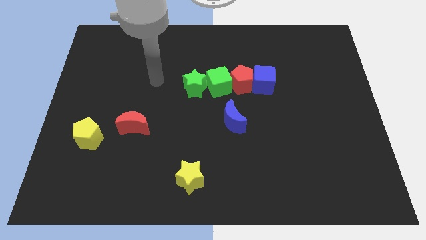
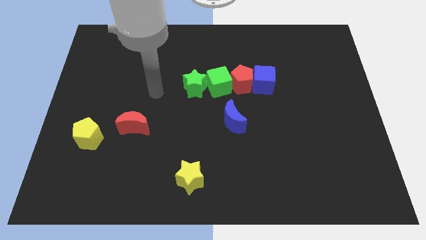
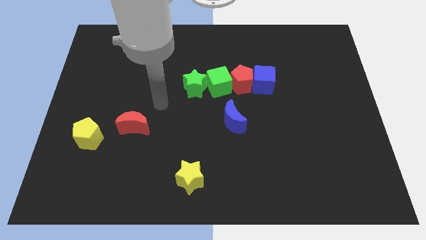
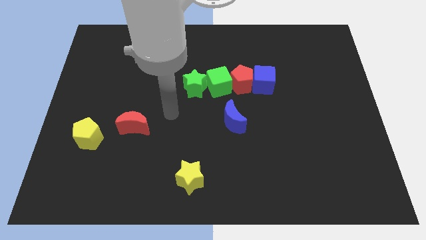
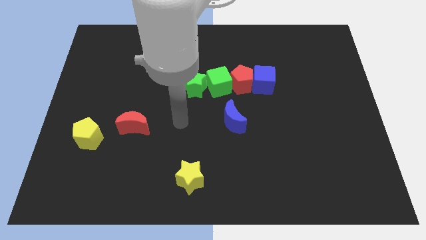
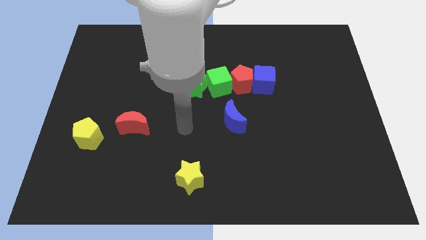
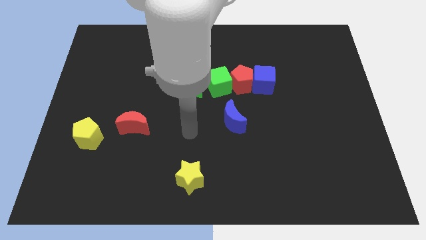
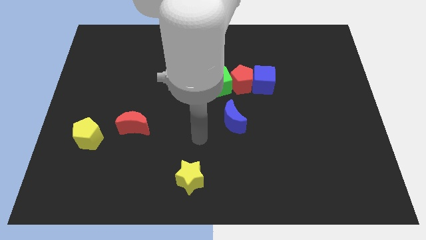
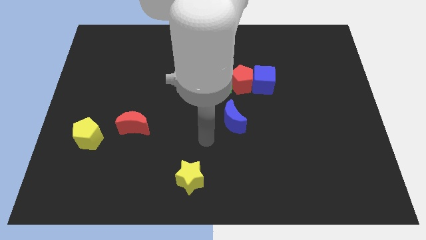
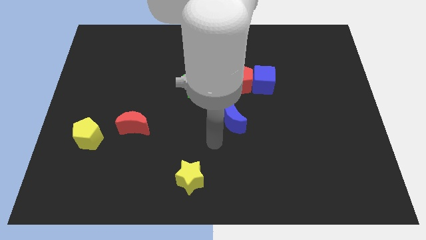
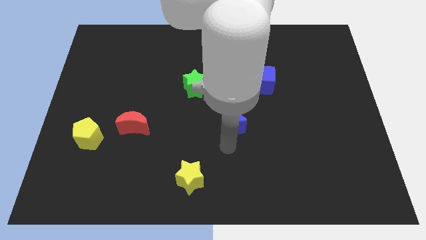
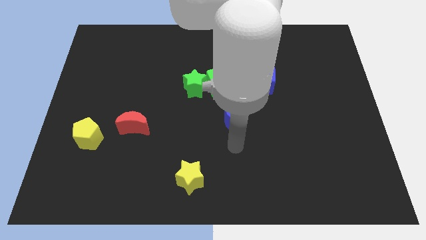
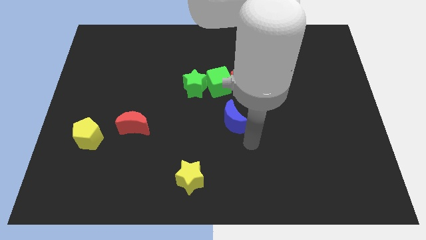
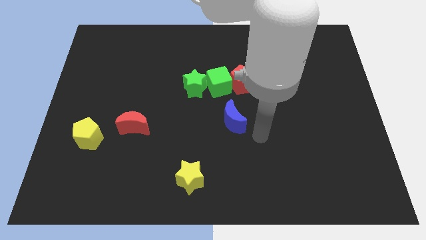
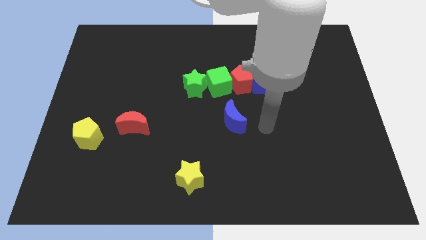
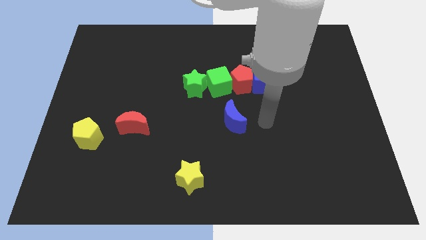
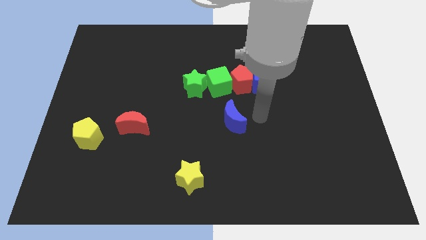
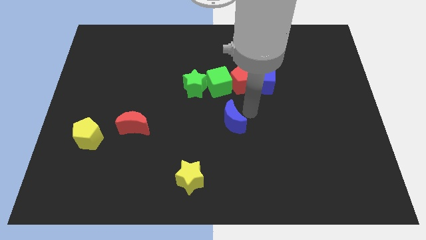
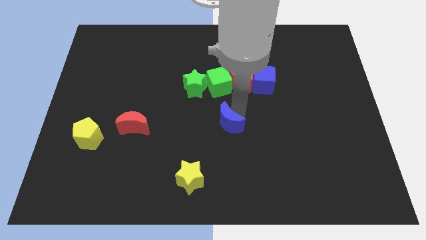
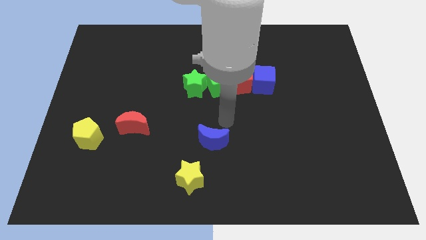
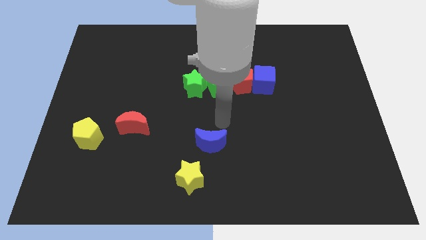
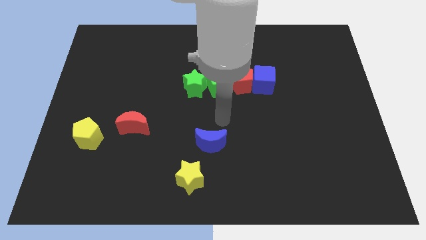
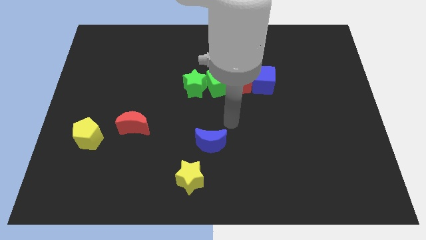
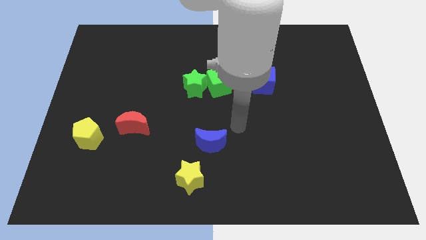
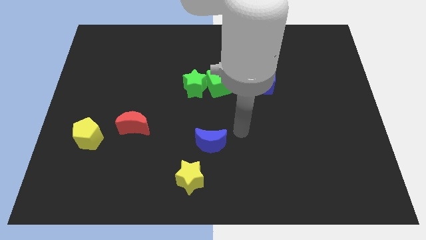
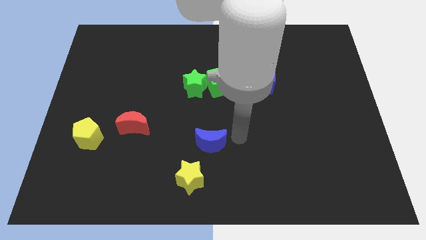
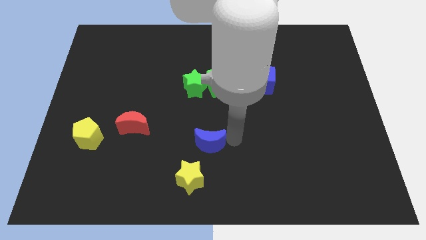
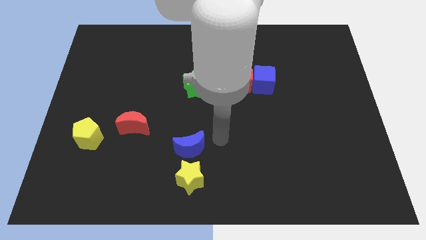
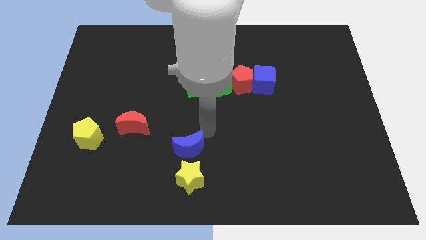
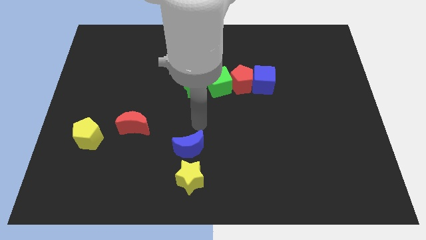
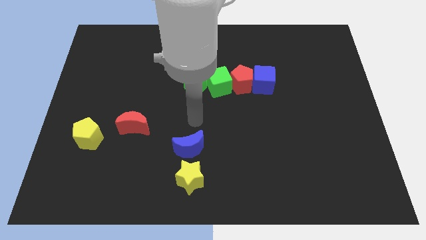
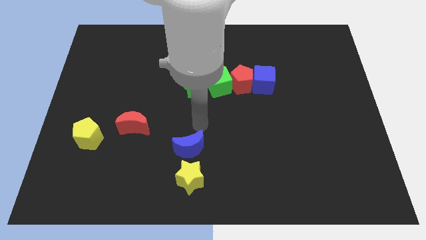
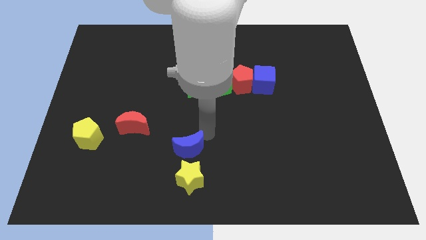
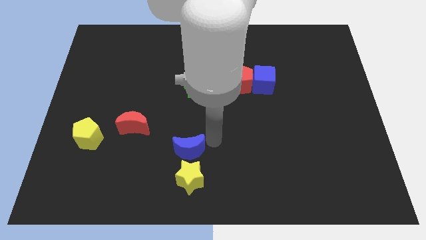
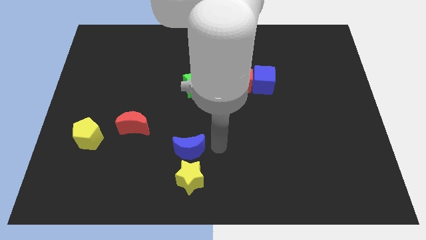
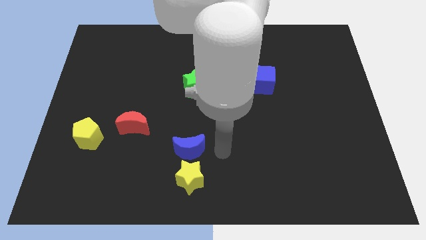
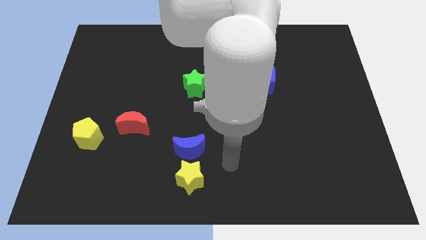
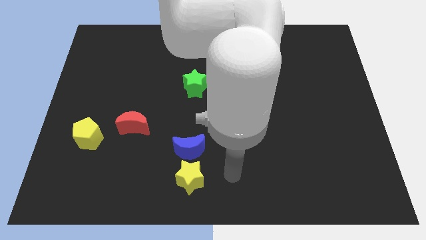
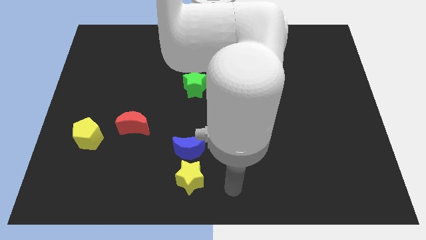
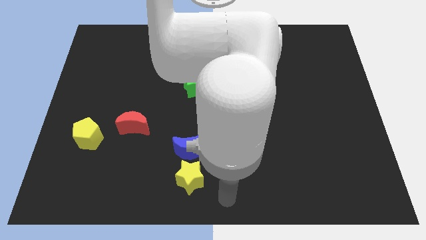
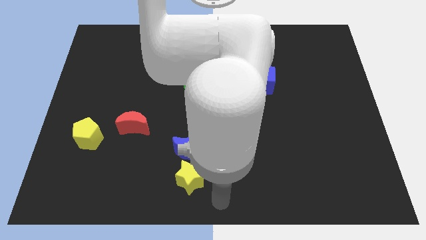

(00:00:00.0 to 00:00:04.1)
place the blue moon to the bottom right of the red moon

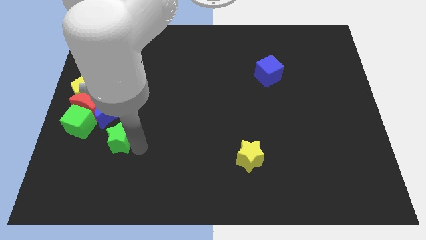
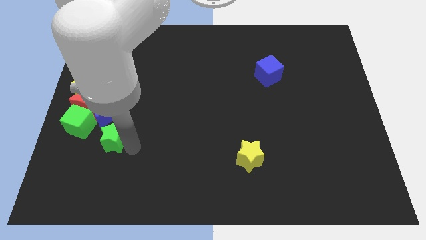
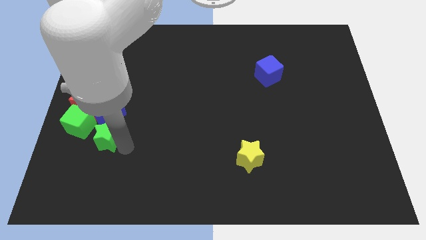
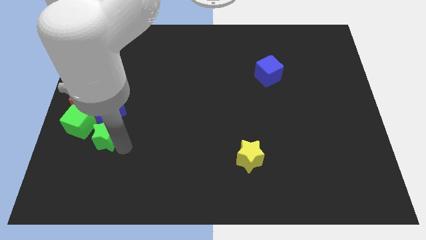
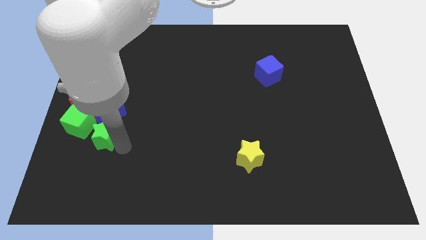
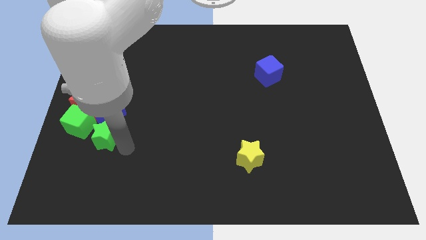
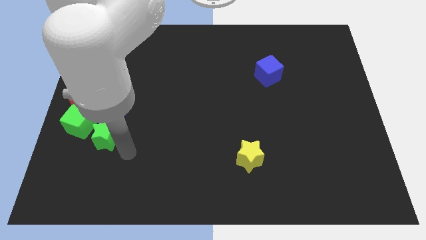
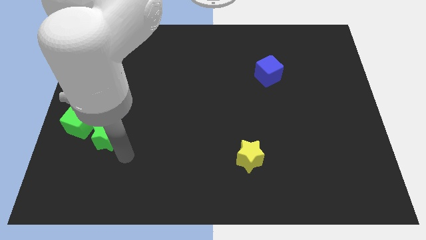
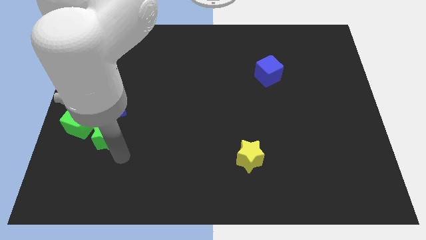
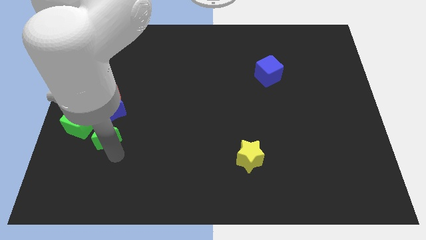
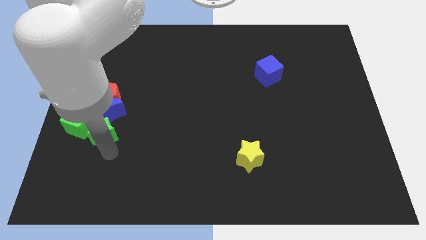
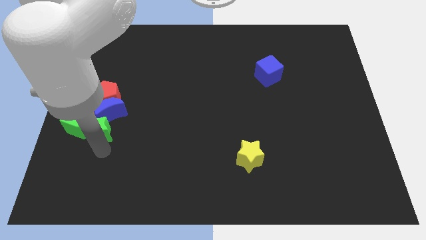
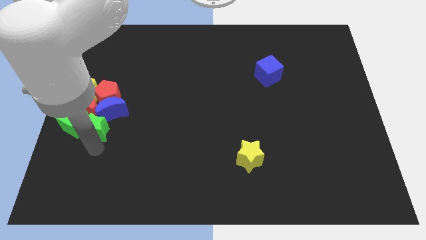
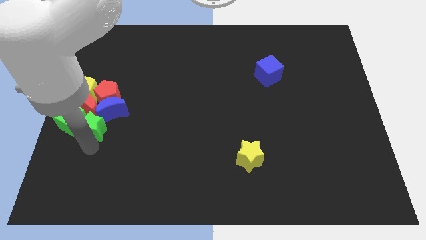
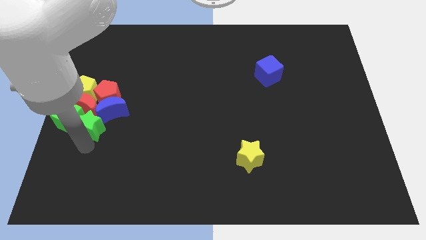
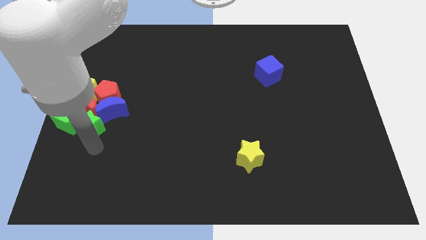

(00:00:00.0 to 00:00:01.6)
push the green star into the green cube

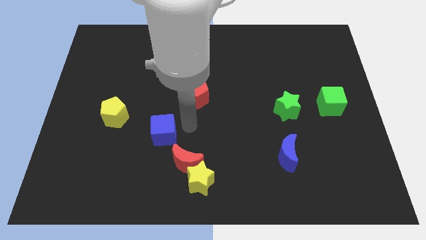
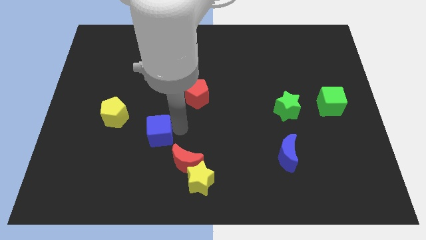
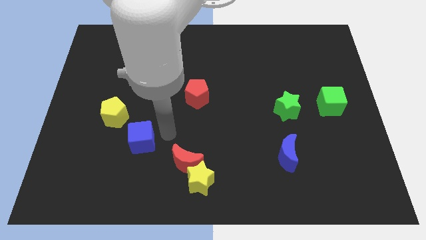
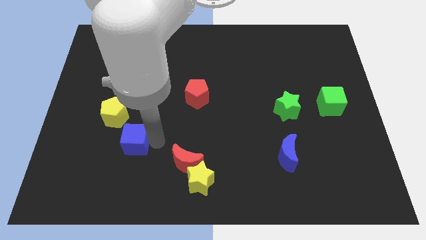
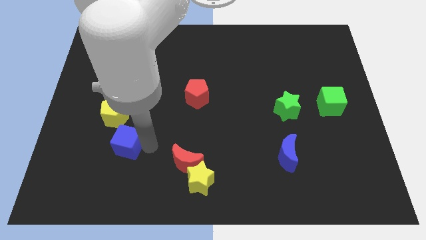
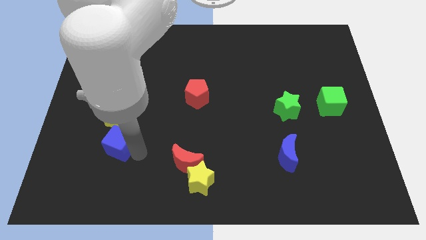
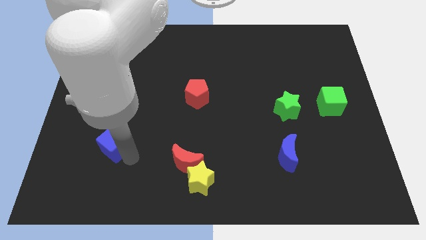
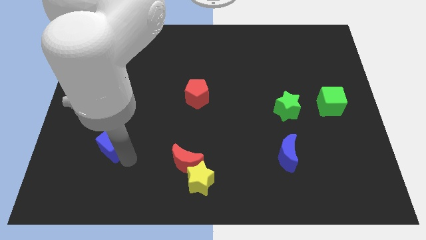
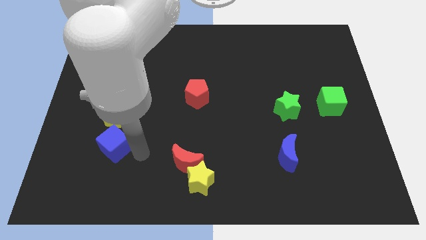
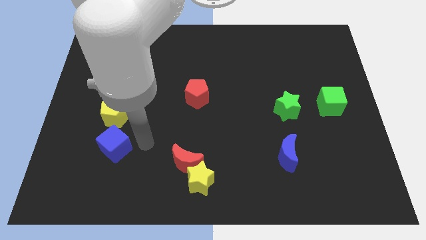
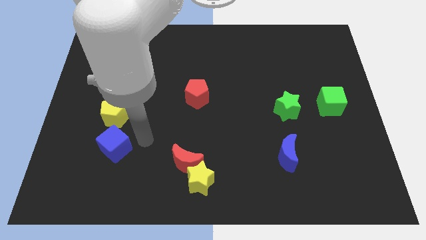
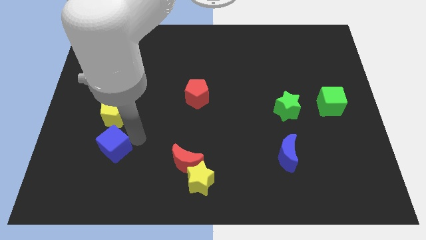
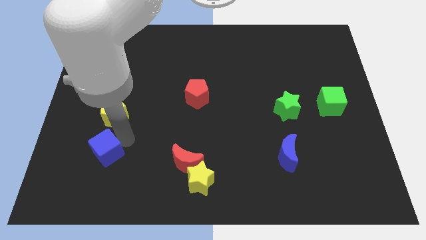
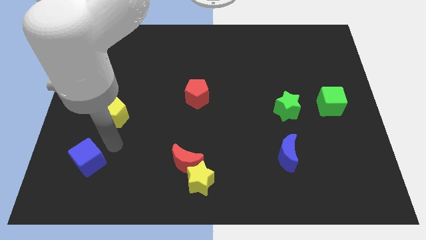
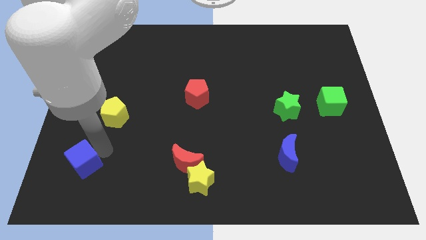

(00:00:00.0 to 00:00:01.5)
place the blue cube left to the red moon
